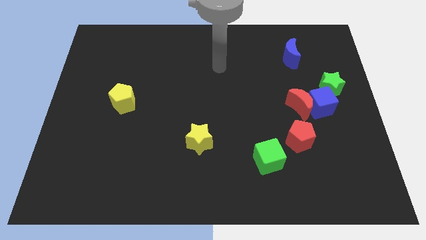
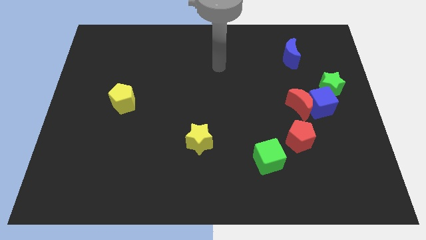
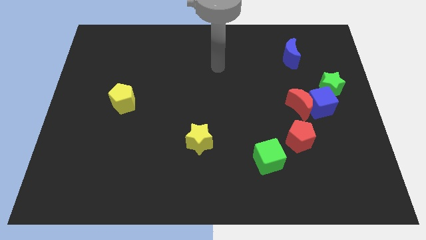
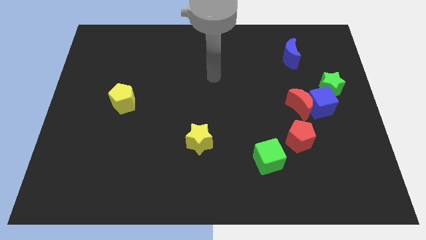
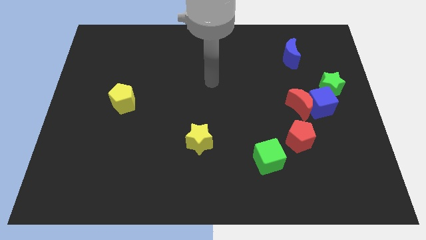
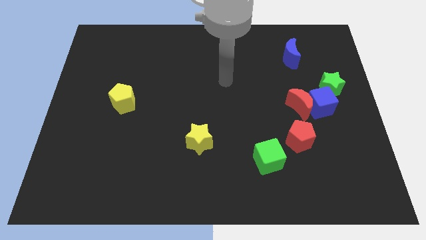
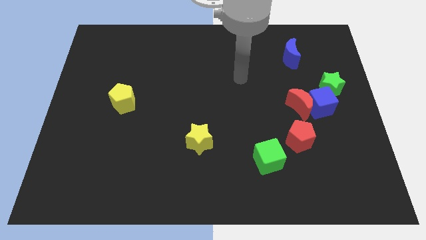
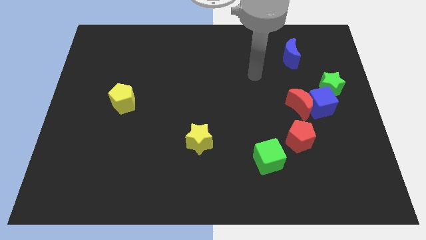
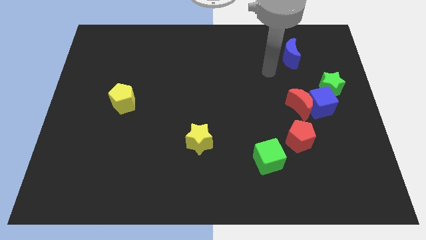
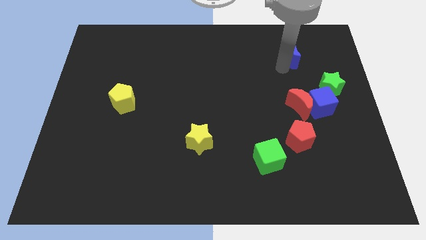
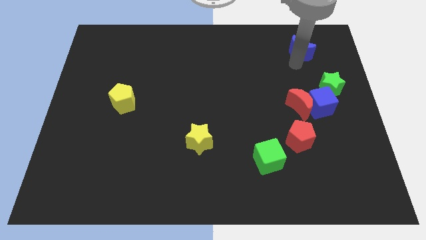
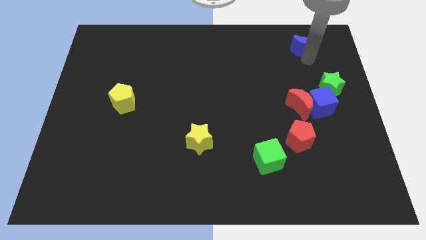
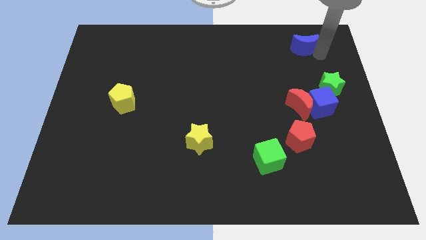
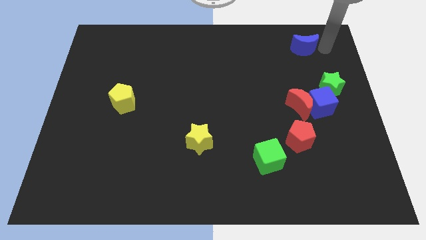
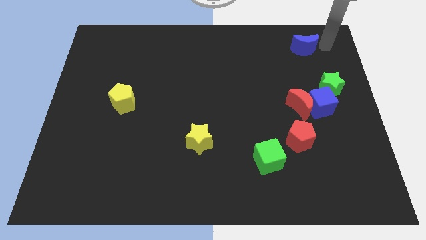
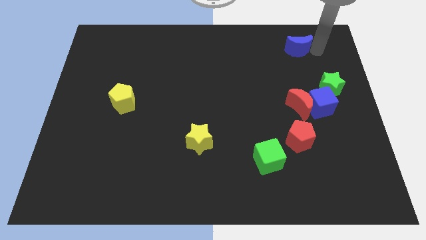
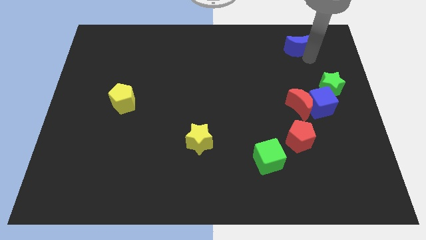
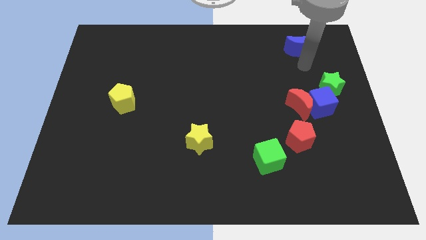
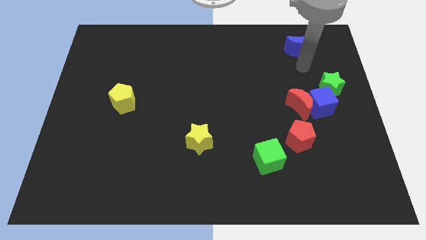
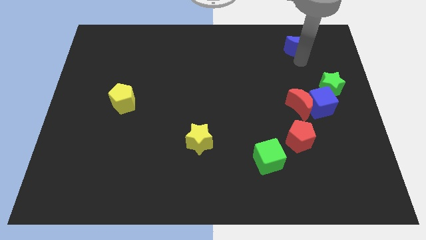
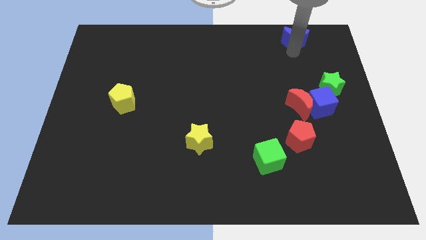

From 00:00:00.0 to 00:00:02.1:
slightly push the blue crescent to the top of the board

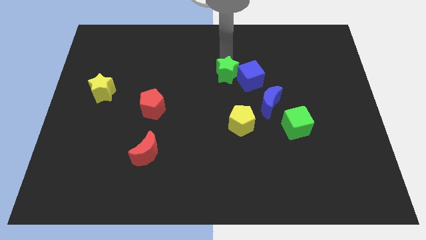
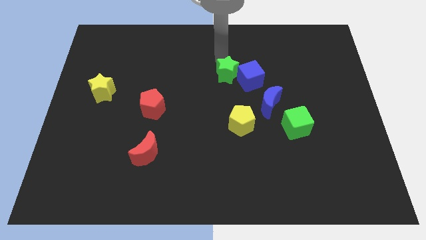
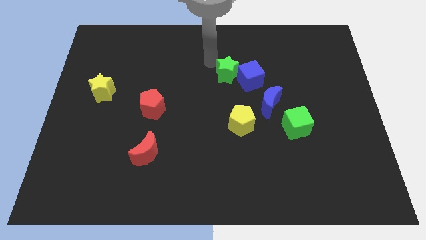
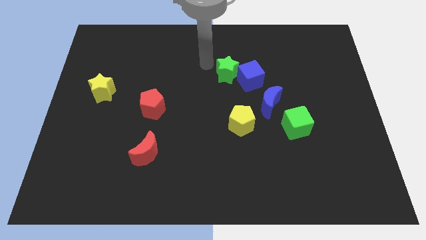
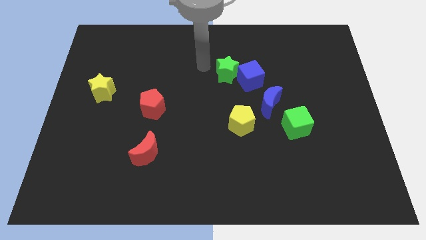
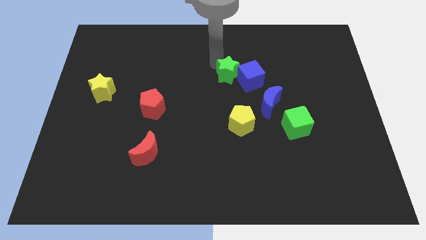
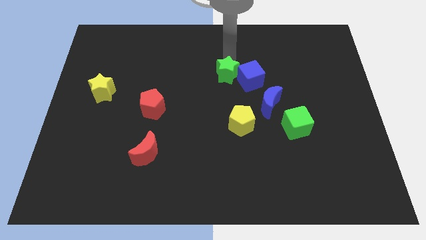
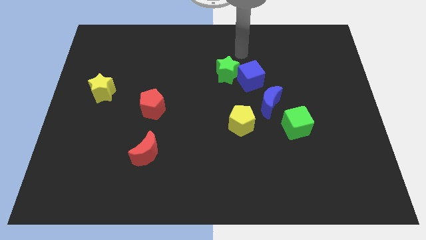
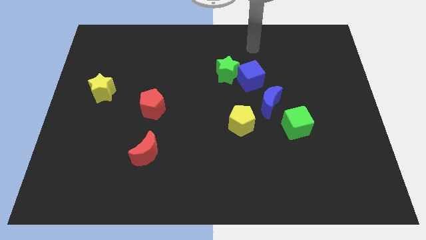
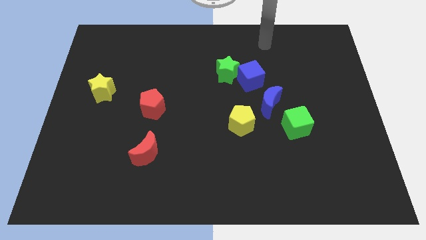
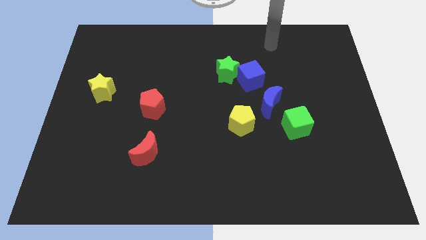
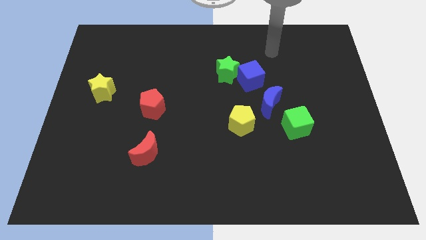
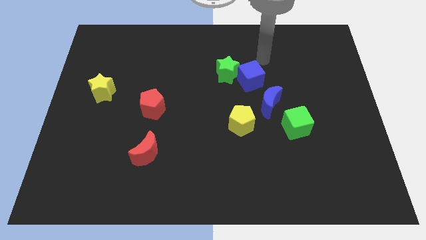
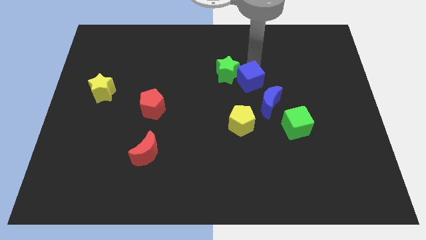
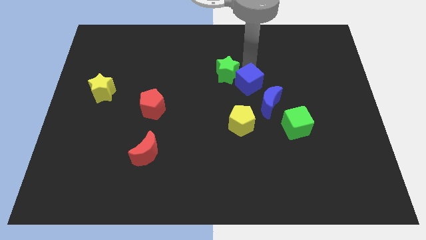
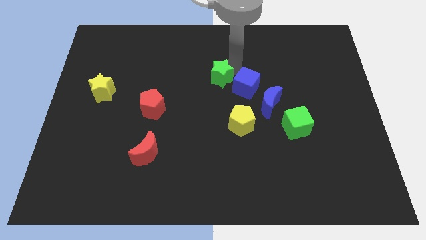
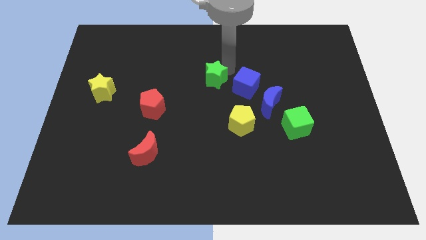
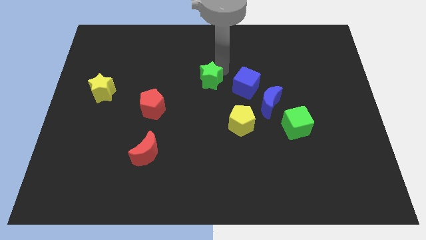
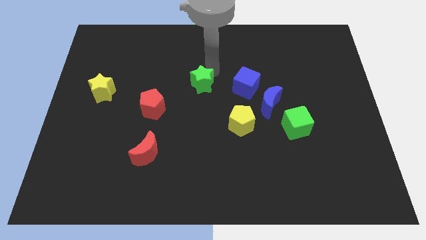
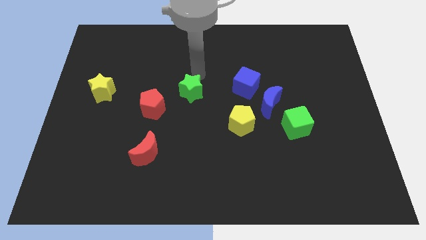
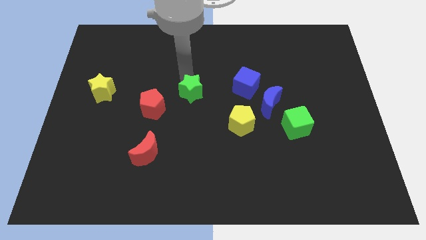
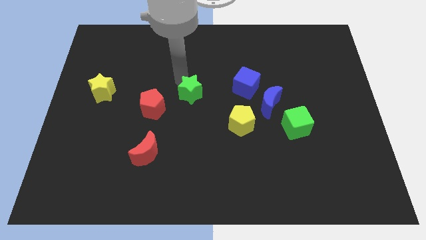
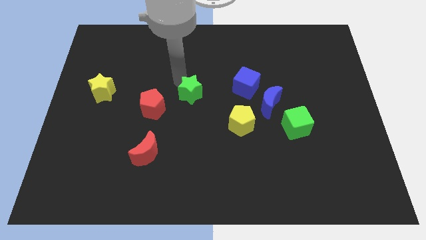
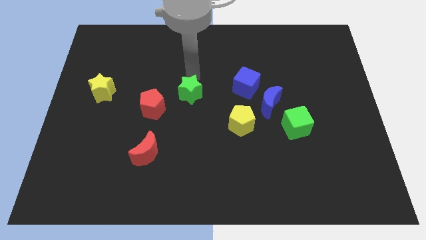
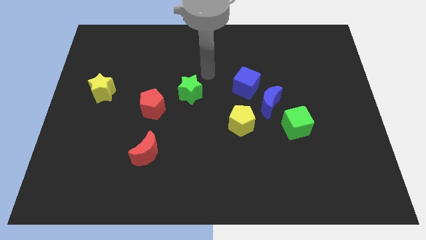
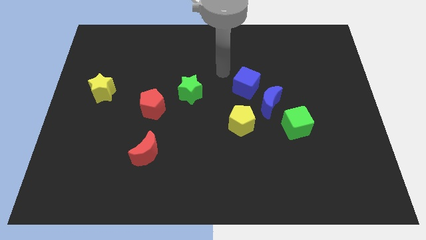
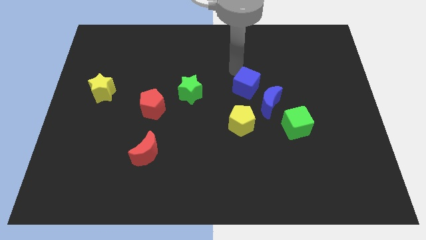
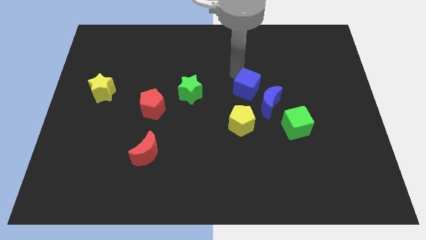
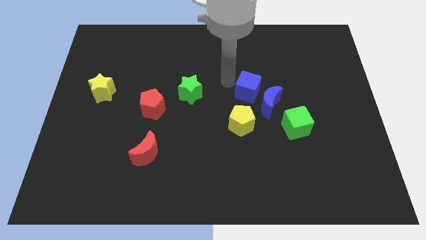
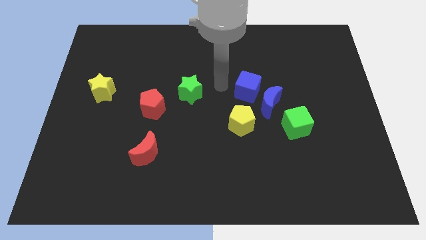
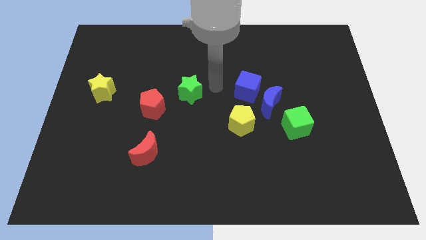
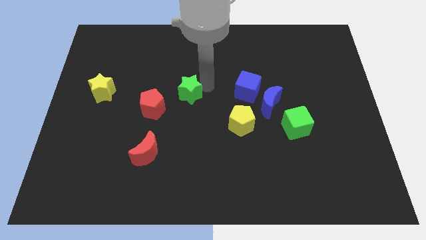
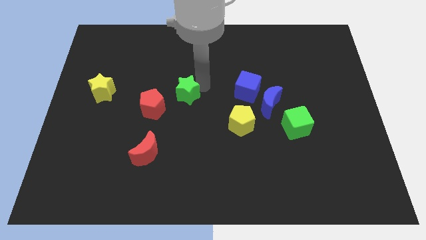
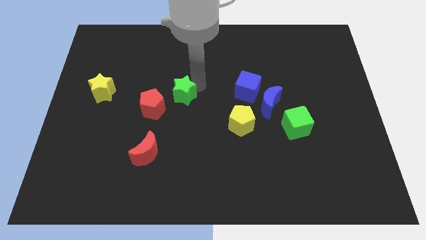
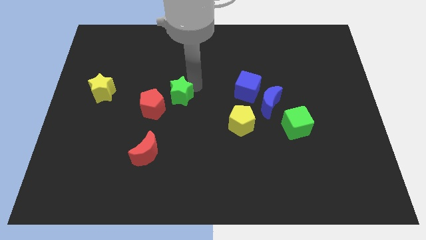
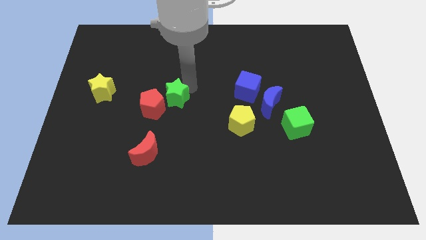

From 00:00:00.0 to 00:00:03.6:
place green star near to red pentagon

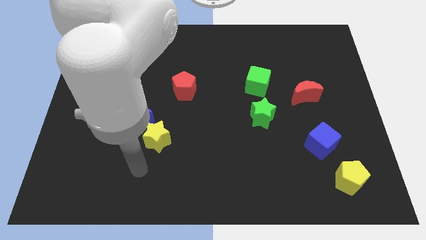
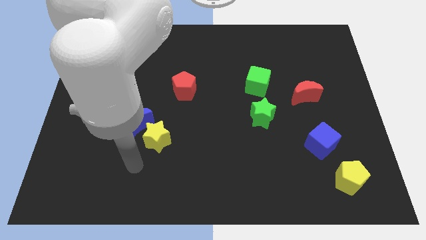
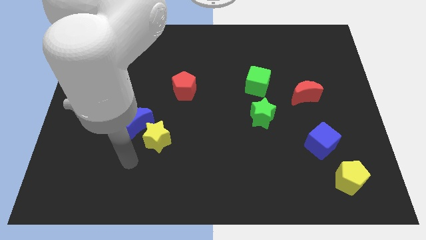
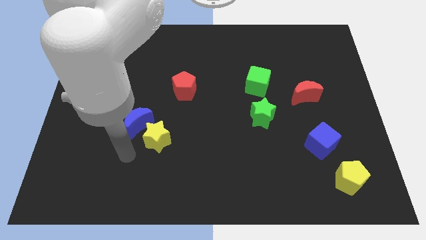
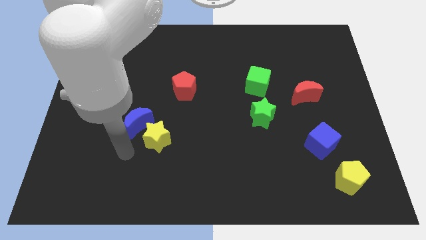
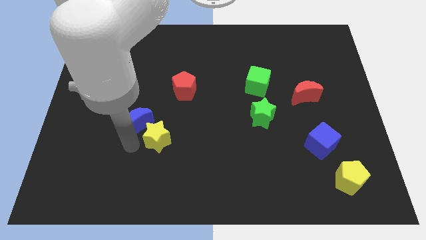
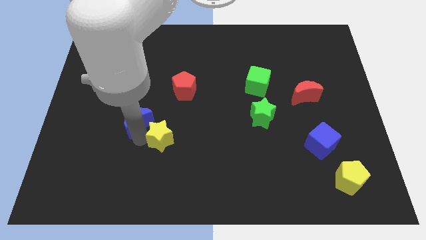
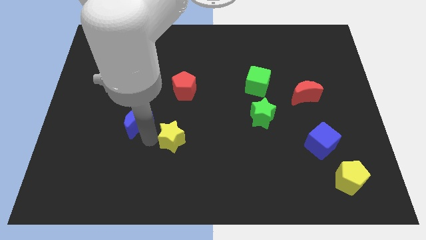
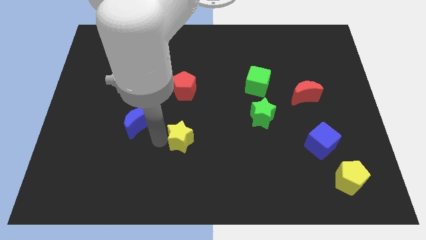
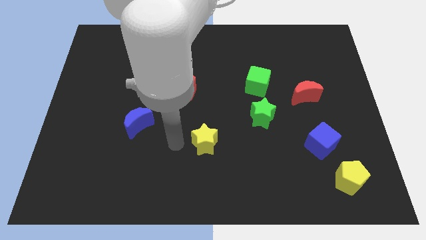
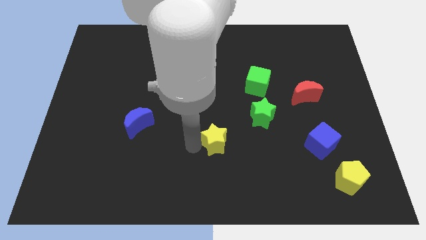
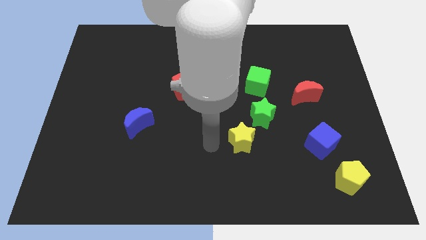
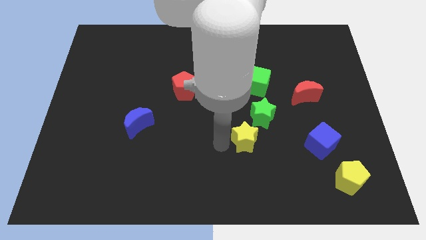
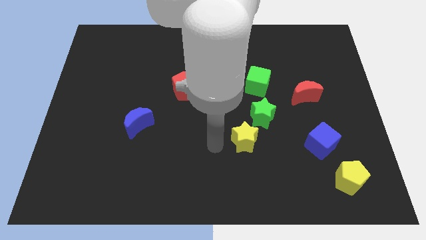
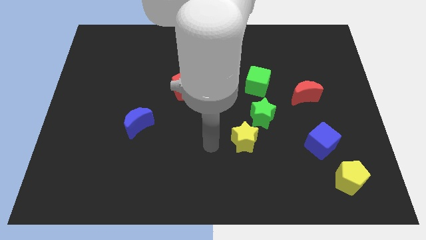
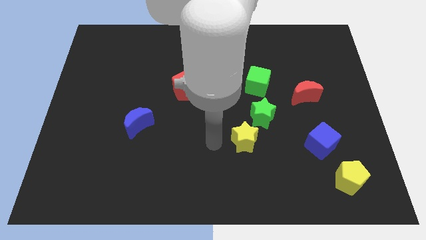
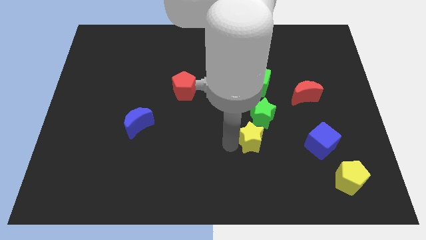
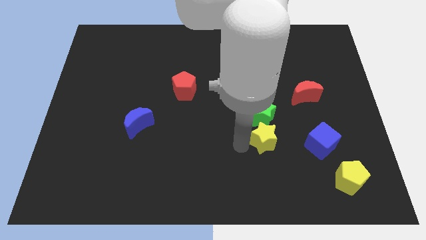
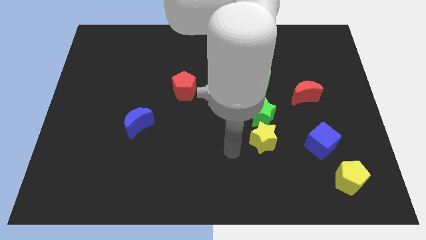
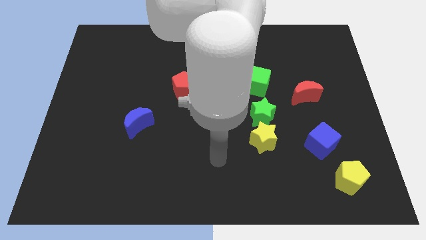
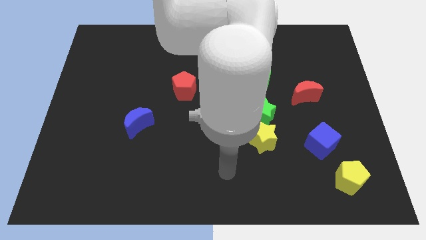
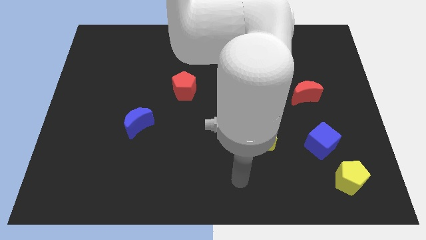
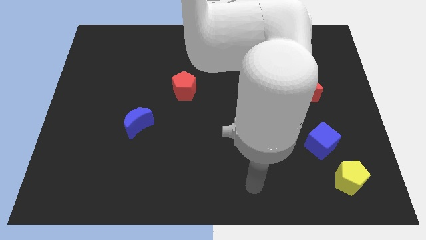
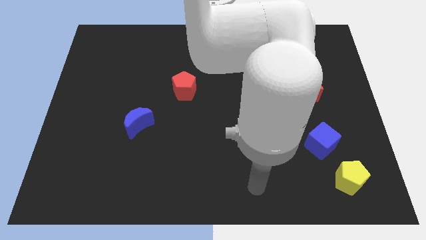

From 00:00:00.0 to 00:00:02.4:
move the yellow star below the green star

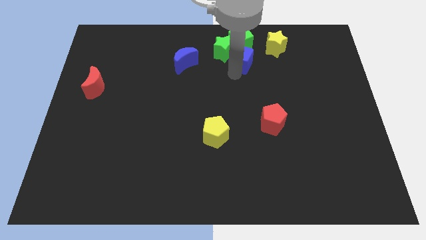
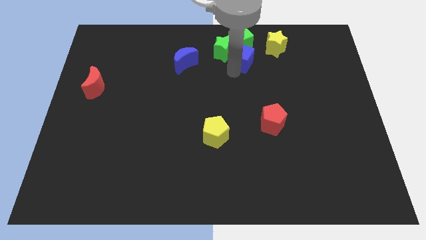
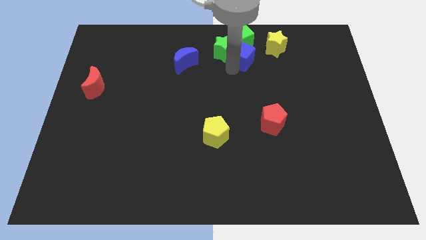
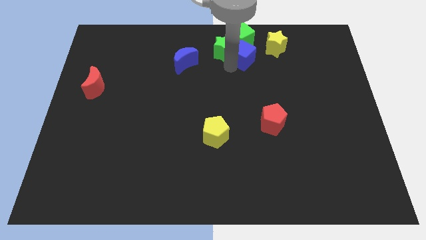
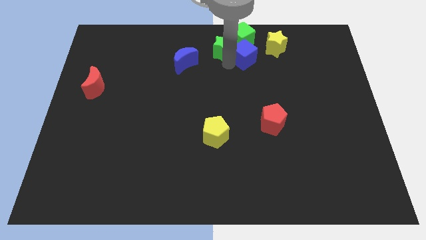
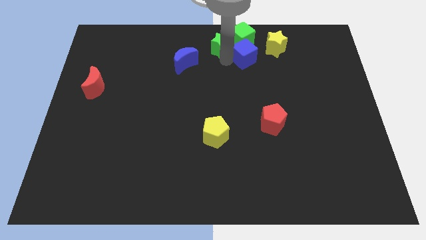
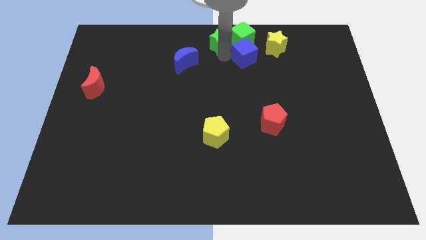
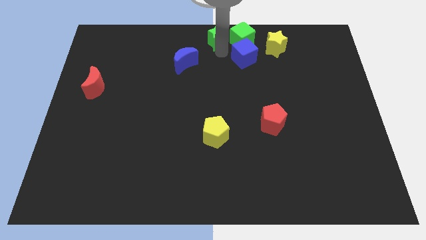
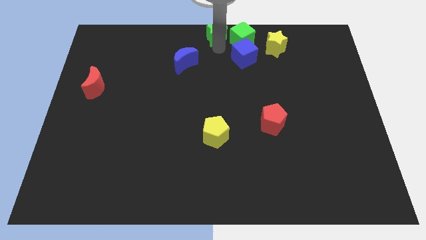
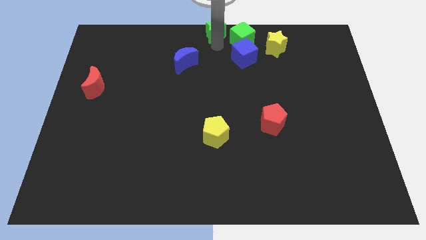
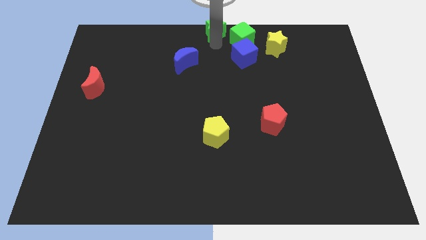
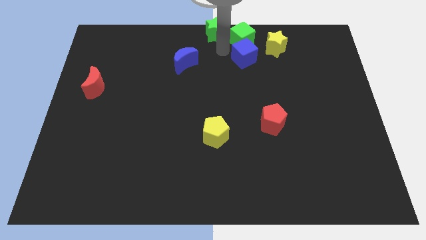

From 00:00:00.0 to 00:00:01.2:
place the green star at the top center of the board
